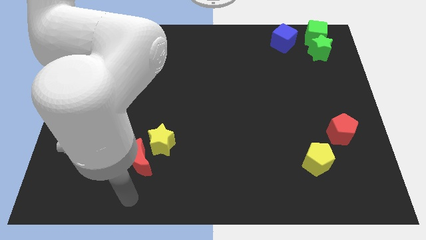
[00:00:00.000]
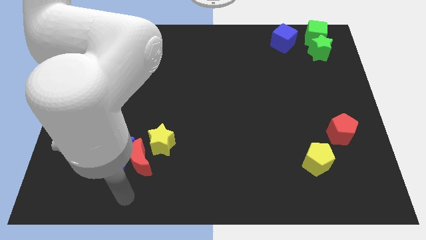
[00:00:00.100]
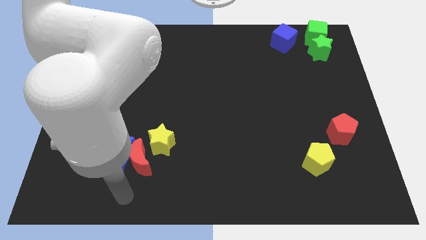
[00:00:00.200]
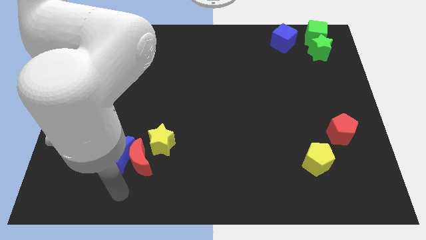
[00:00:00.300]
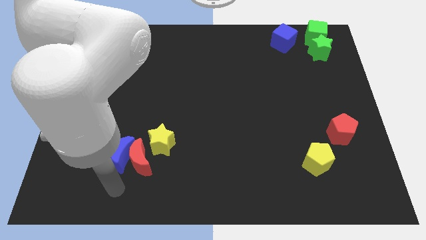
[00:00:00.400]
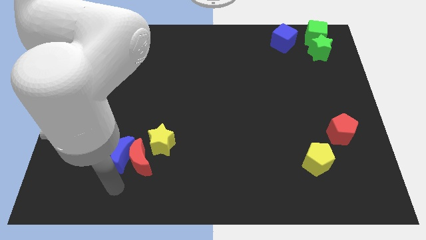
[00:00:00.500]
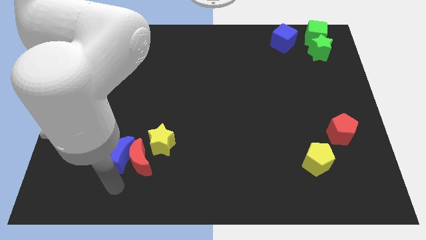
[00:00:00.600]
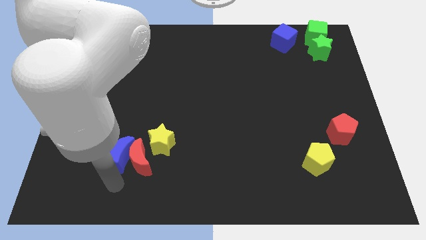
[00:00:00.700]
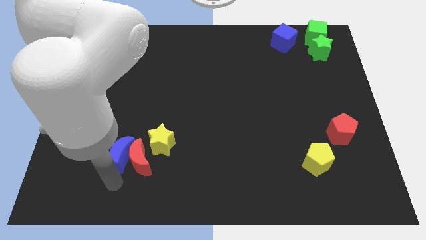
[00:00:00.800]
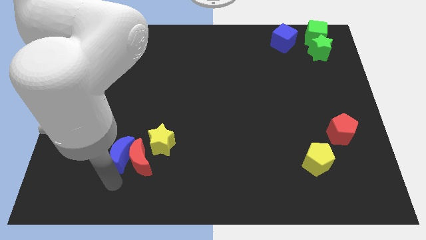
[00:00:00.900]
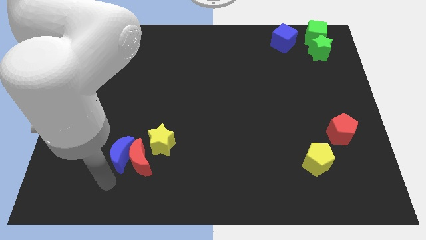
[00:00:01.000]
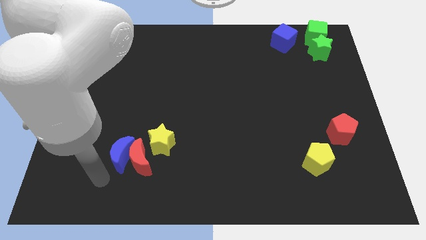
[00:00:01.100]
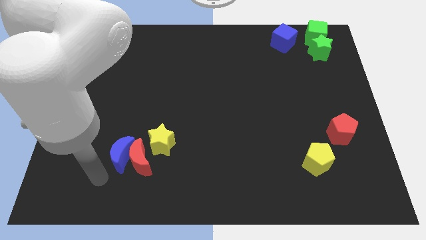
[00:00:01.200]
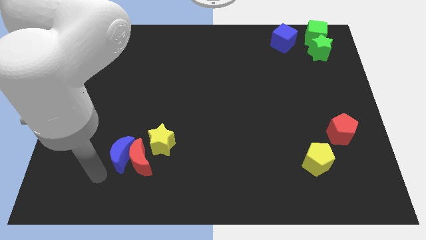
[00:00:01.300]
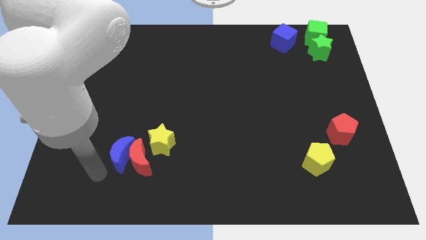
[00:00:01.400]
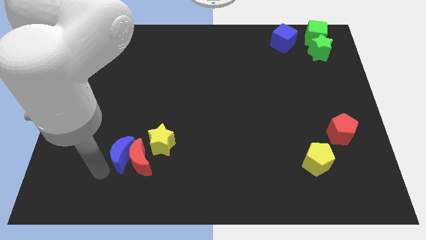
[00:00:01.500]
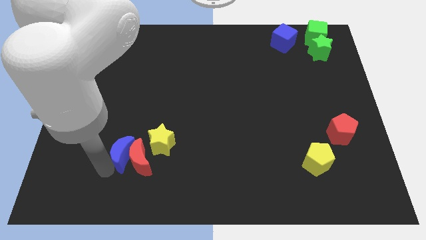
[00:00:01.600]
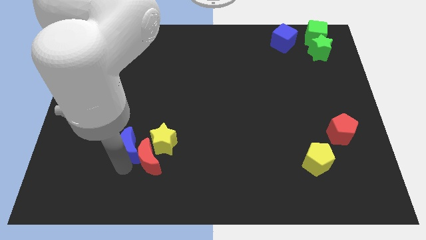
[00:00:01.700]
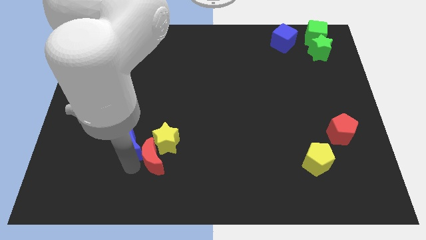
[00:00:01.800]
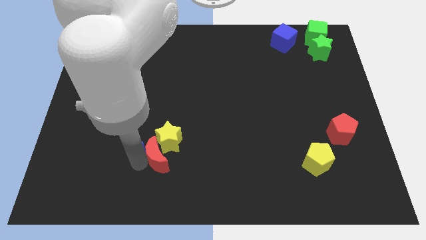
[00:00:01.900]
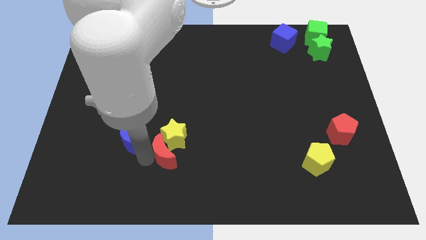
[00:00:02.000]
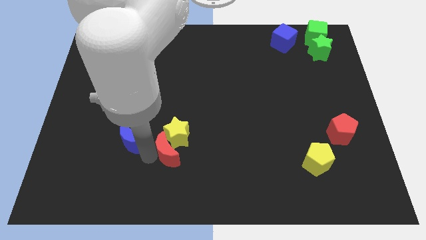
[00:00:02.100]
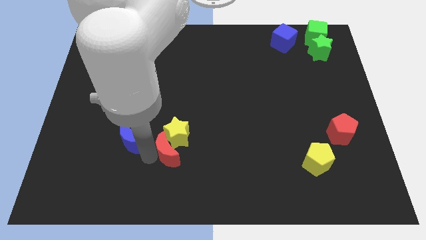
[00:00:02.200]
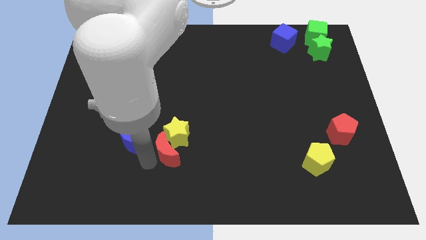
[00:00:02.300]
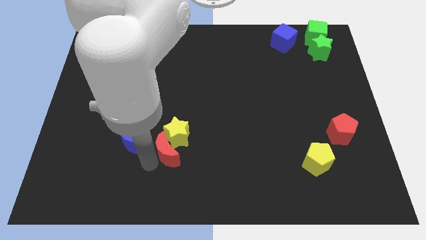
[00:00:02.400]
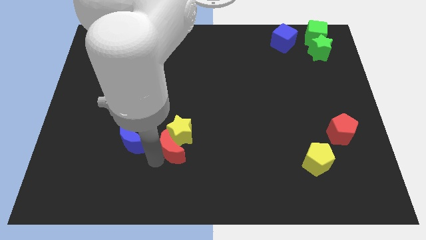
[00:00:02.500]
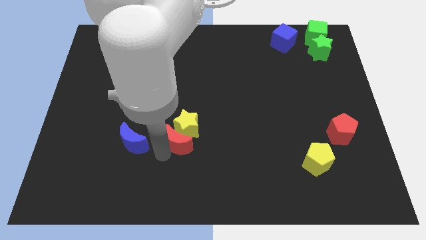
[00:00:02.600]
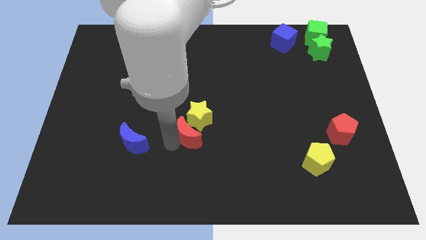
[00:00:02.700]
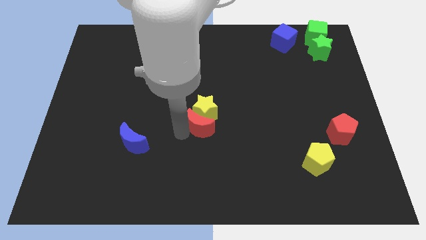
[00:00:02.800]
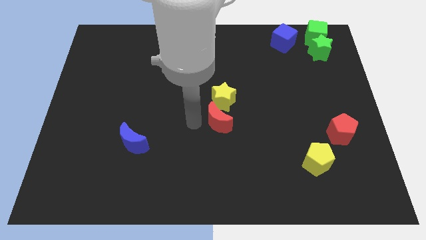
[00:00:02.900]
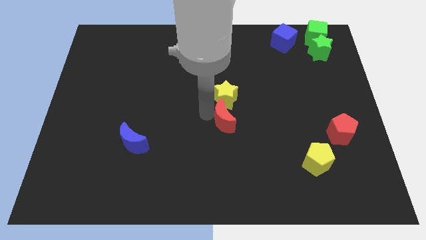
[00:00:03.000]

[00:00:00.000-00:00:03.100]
drag the yellow star and red moon to the center

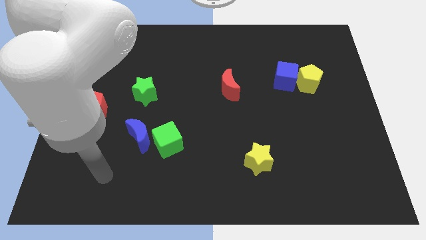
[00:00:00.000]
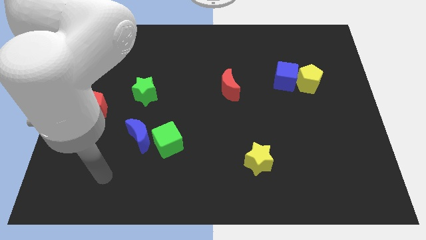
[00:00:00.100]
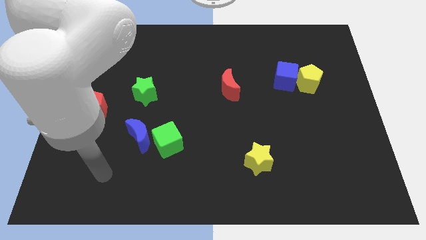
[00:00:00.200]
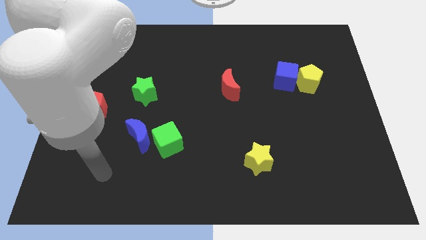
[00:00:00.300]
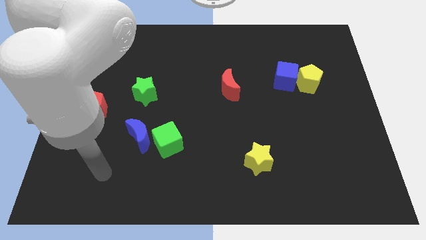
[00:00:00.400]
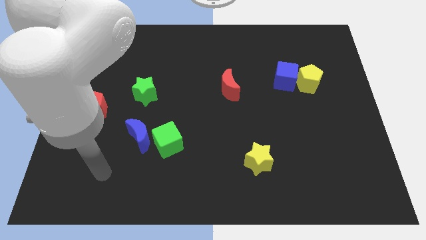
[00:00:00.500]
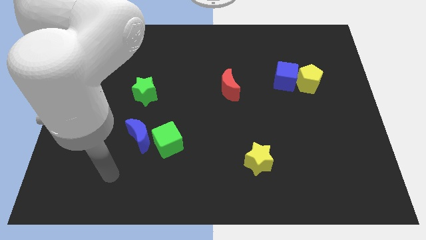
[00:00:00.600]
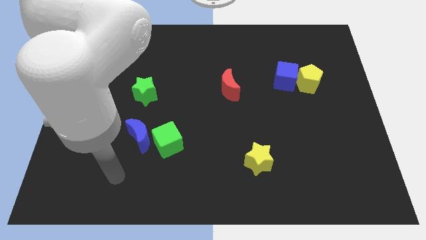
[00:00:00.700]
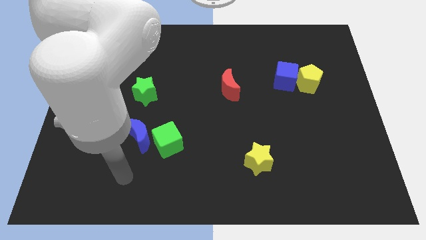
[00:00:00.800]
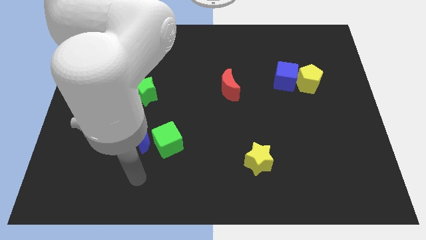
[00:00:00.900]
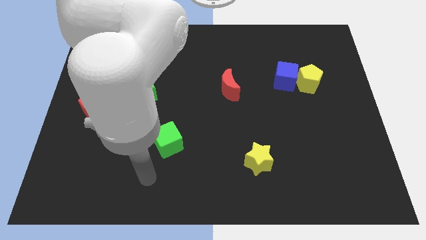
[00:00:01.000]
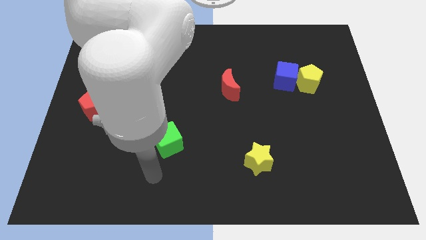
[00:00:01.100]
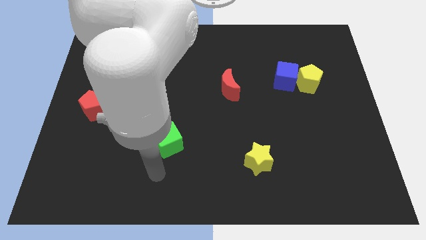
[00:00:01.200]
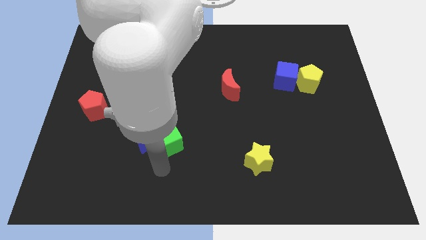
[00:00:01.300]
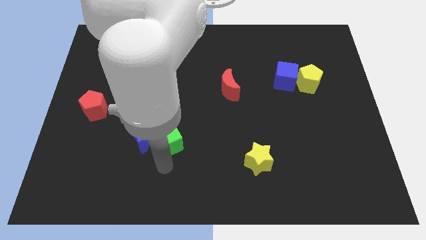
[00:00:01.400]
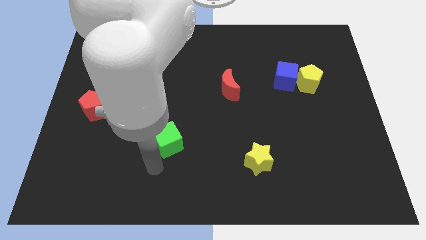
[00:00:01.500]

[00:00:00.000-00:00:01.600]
move the arm below the green cube

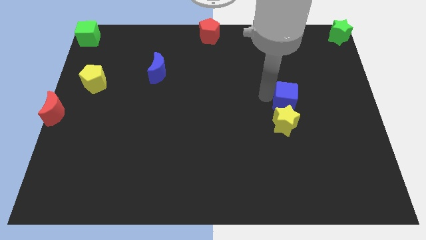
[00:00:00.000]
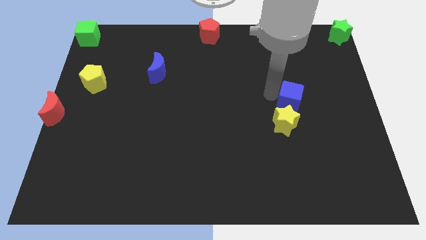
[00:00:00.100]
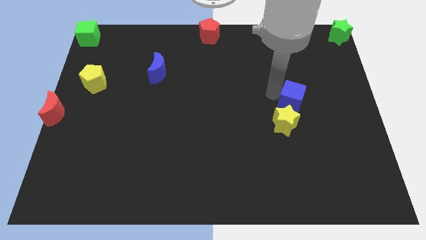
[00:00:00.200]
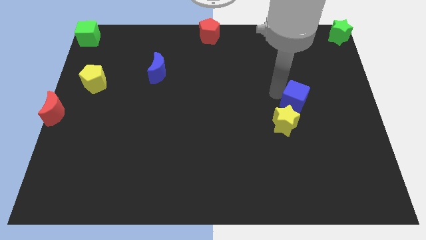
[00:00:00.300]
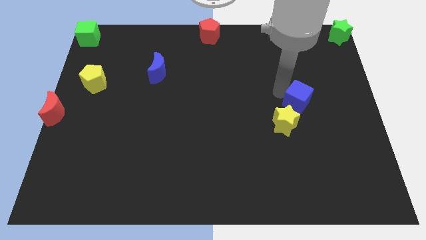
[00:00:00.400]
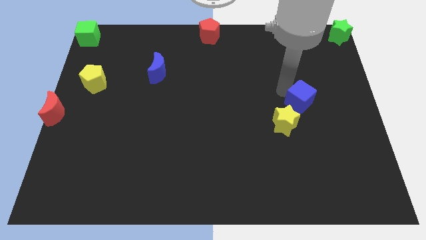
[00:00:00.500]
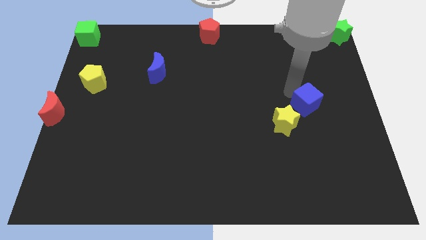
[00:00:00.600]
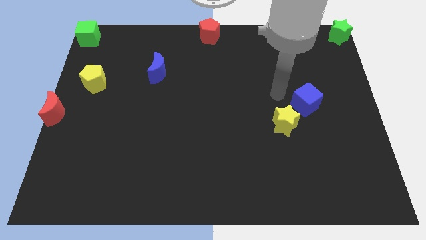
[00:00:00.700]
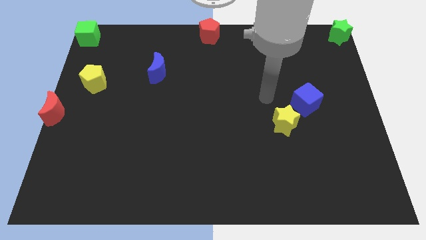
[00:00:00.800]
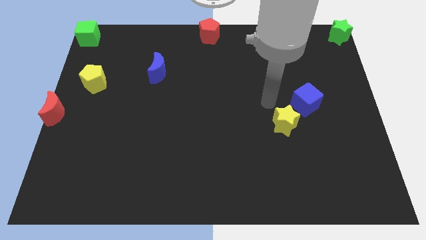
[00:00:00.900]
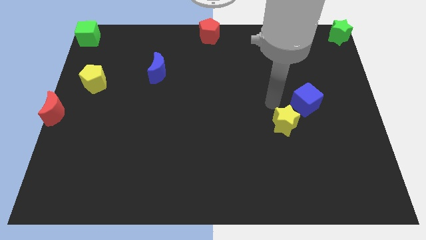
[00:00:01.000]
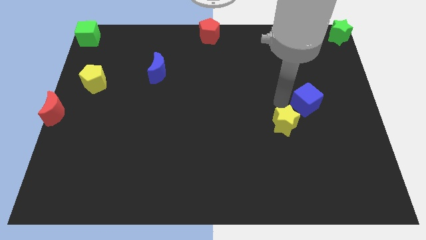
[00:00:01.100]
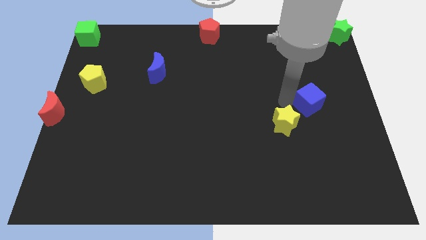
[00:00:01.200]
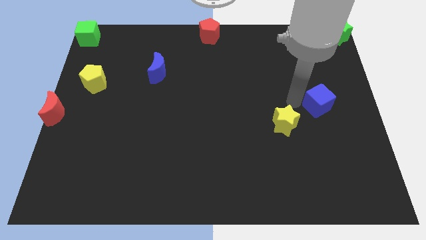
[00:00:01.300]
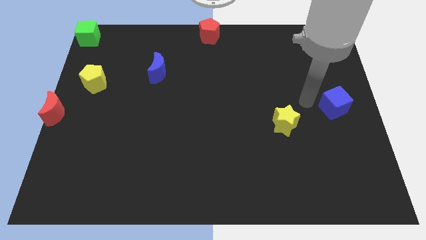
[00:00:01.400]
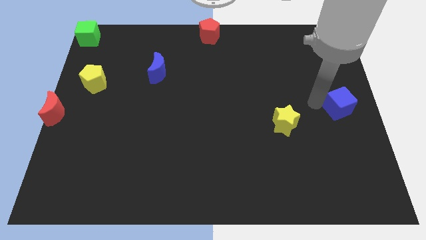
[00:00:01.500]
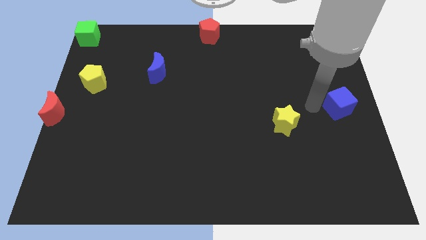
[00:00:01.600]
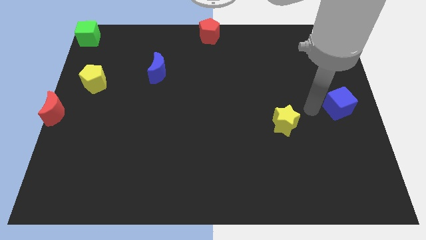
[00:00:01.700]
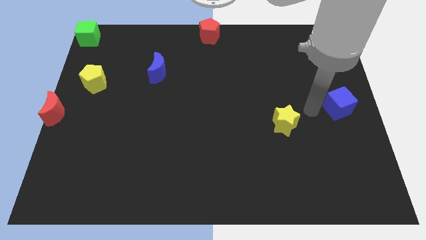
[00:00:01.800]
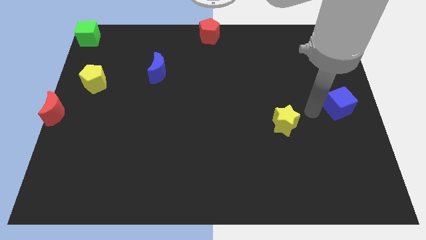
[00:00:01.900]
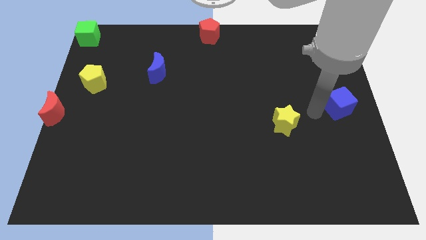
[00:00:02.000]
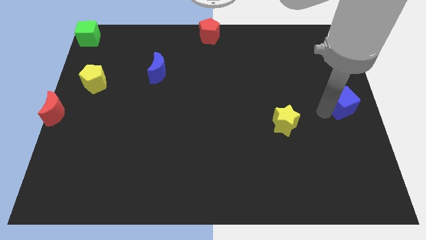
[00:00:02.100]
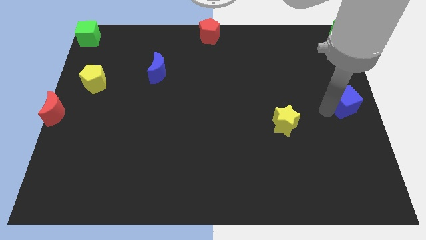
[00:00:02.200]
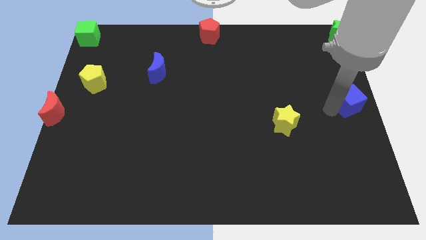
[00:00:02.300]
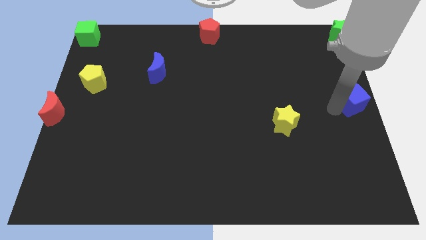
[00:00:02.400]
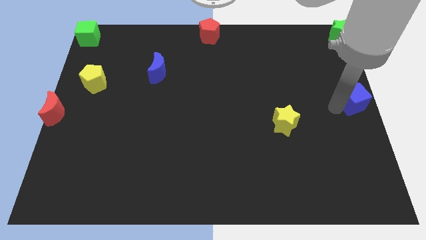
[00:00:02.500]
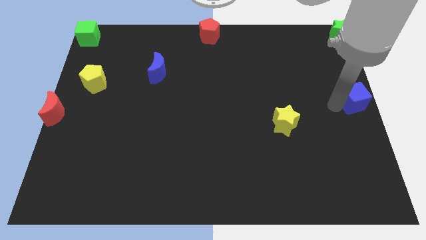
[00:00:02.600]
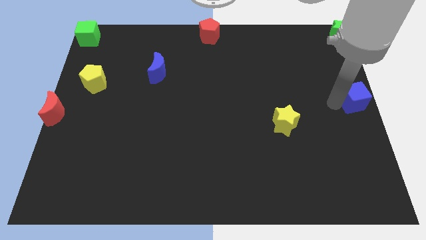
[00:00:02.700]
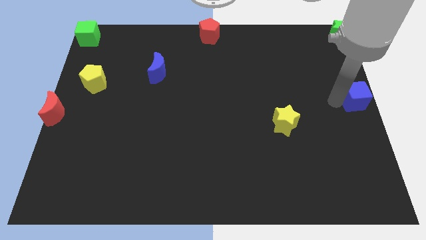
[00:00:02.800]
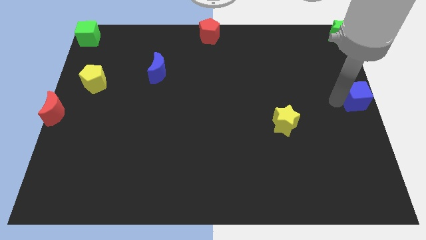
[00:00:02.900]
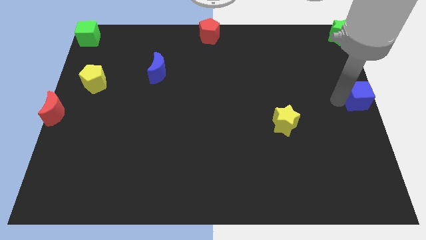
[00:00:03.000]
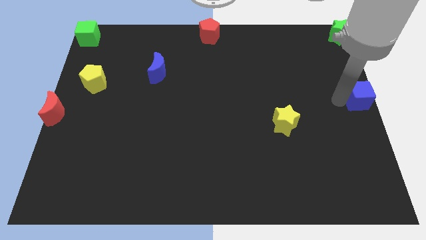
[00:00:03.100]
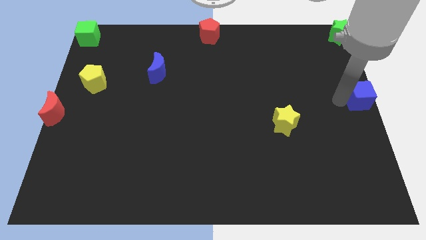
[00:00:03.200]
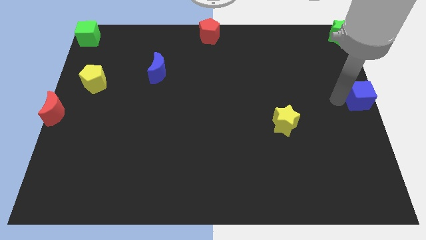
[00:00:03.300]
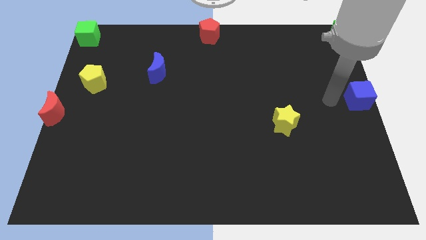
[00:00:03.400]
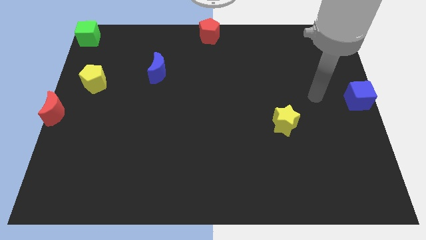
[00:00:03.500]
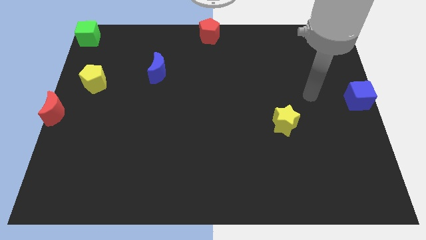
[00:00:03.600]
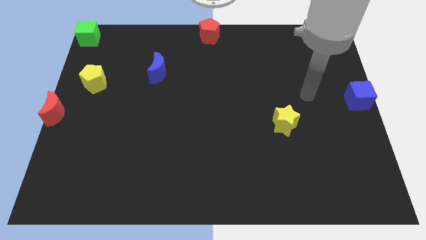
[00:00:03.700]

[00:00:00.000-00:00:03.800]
push the blue cube to the center right side of the board
